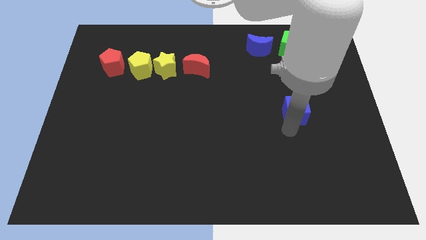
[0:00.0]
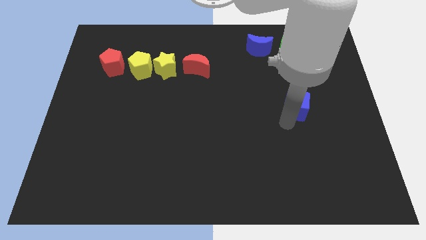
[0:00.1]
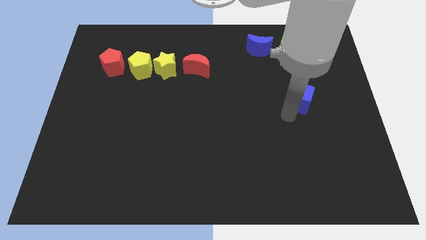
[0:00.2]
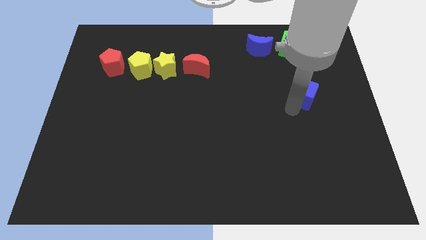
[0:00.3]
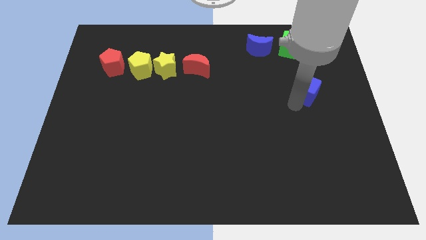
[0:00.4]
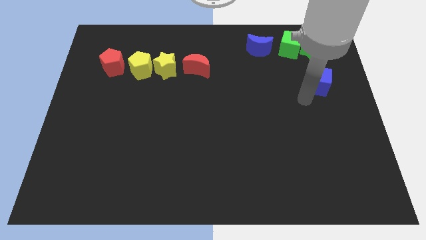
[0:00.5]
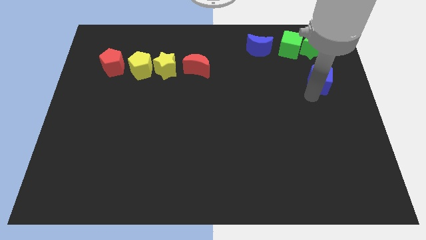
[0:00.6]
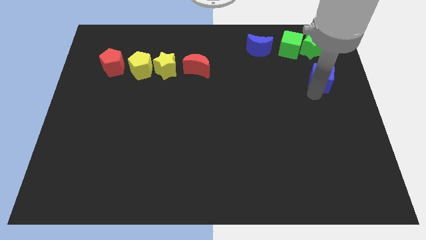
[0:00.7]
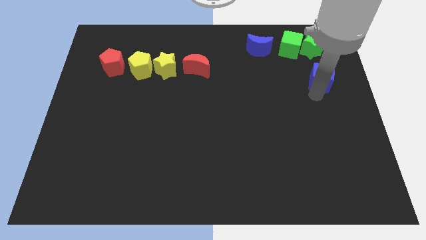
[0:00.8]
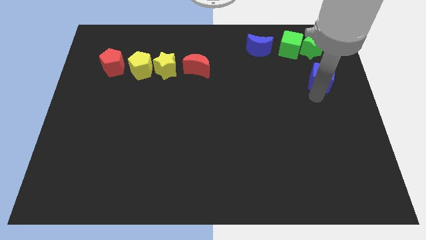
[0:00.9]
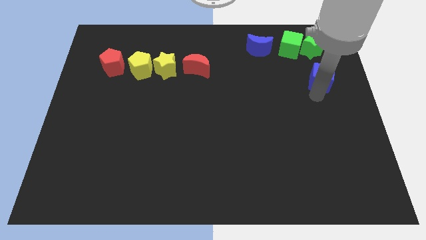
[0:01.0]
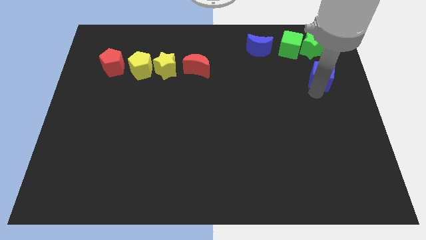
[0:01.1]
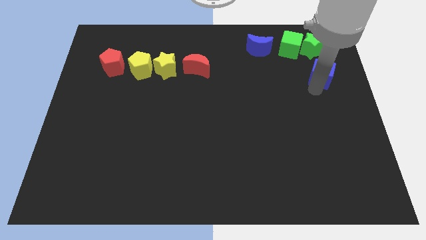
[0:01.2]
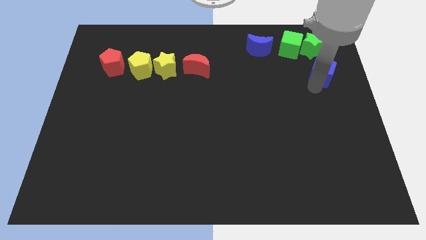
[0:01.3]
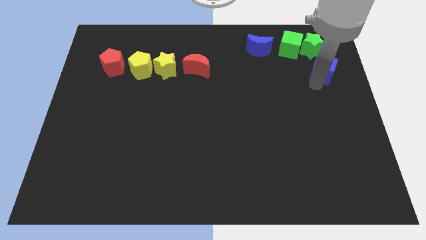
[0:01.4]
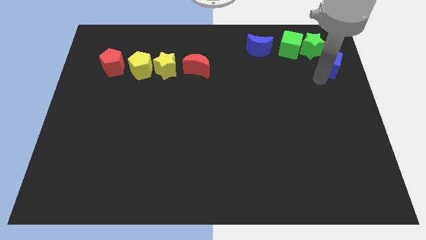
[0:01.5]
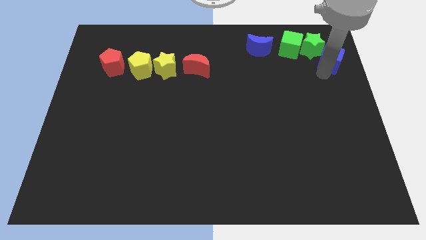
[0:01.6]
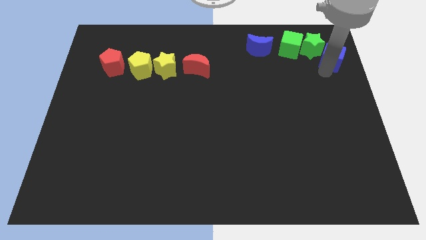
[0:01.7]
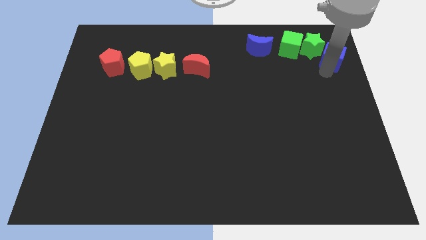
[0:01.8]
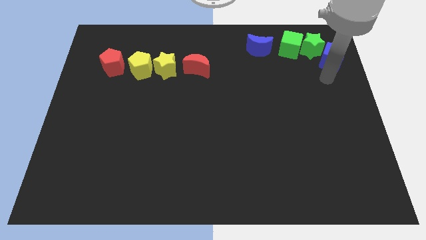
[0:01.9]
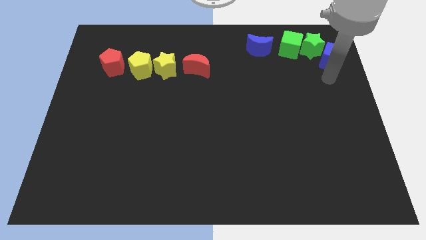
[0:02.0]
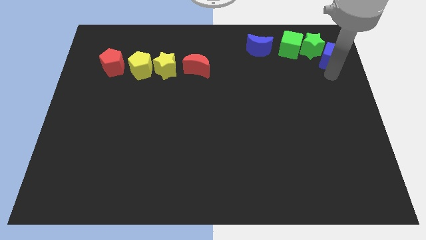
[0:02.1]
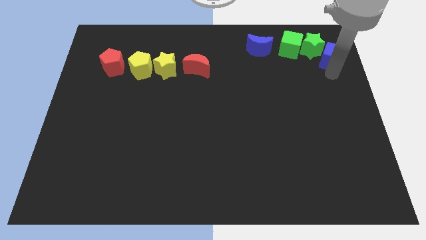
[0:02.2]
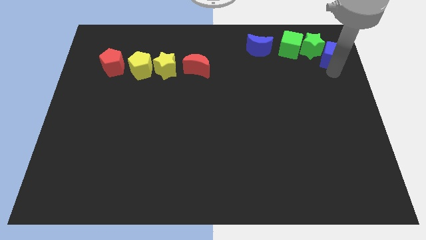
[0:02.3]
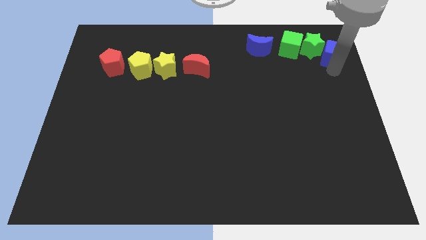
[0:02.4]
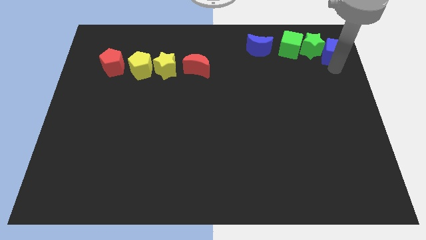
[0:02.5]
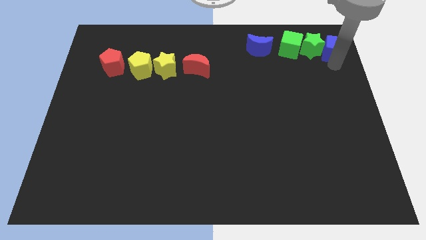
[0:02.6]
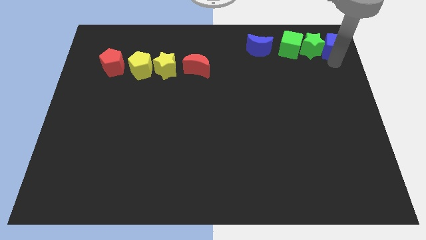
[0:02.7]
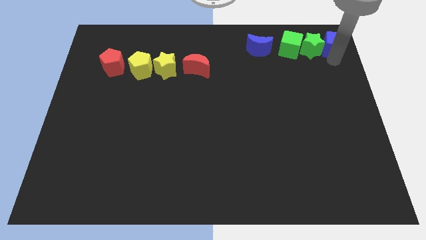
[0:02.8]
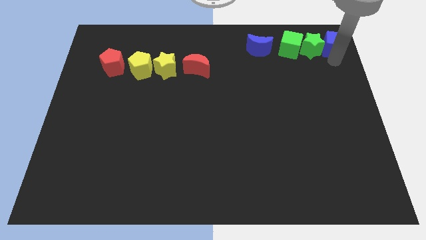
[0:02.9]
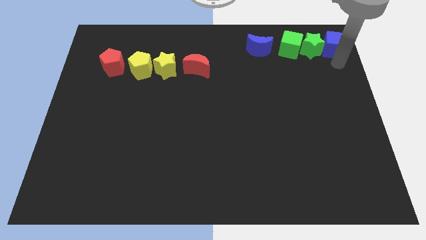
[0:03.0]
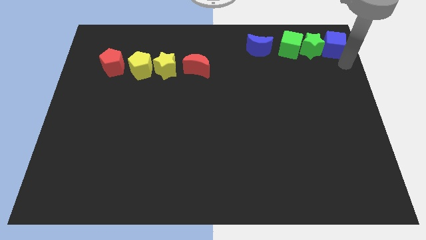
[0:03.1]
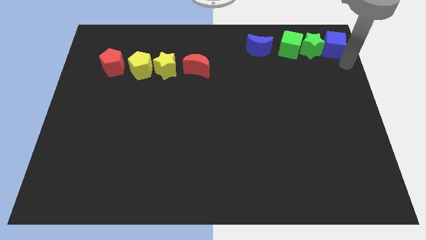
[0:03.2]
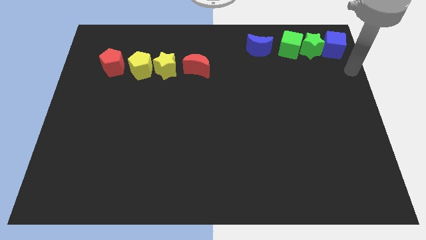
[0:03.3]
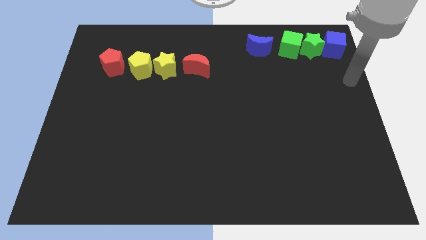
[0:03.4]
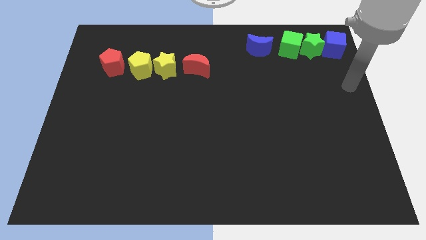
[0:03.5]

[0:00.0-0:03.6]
place the blue cube to the right of the green star

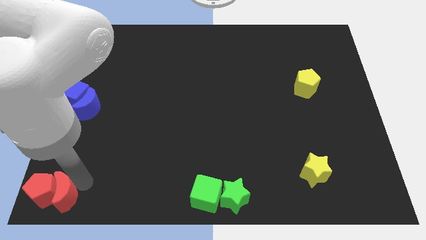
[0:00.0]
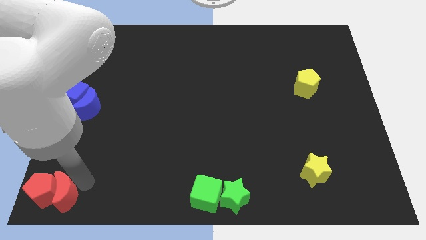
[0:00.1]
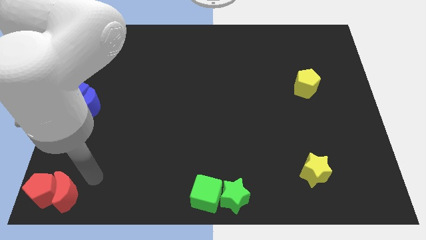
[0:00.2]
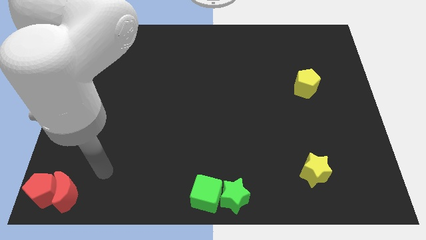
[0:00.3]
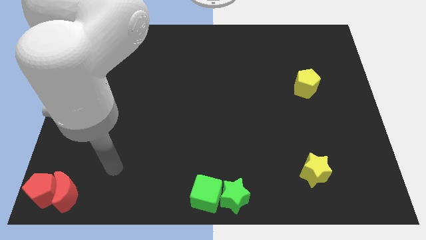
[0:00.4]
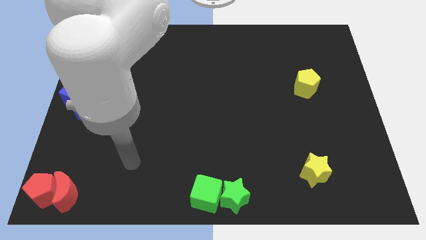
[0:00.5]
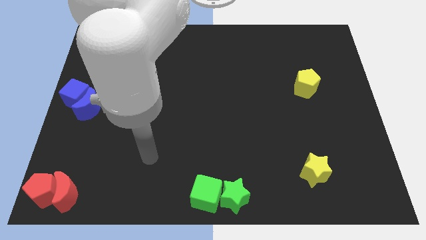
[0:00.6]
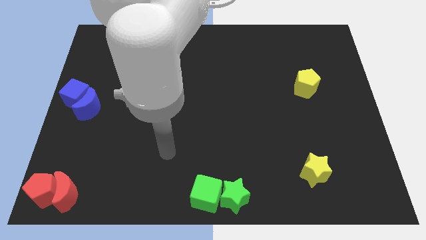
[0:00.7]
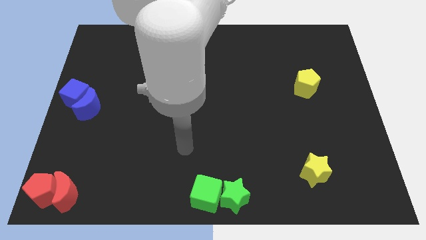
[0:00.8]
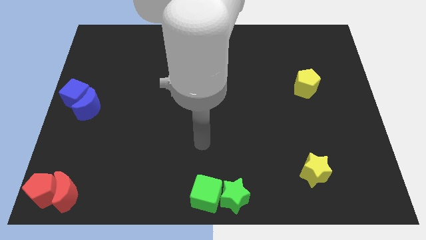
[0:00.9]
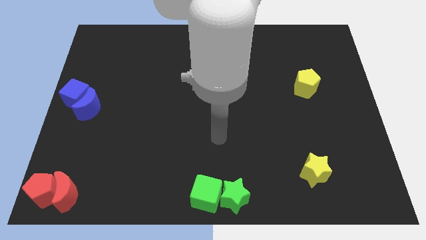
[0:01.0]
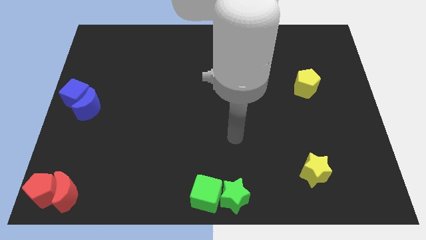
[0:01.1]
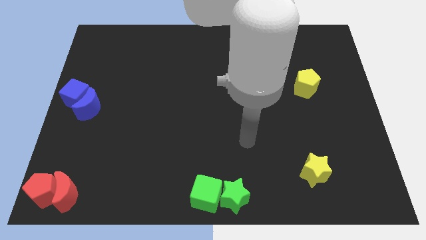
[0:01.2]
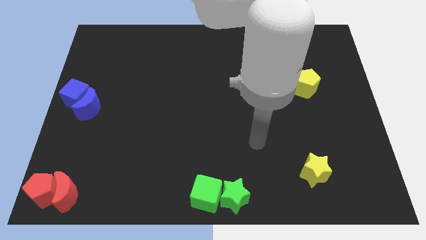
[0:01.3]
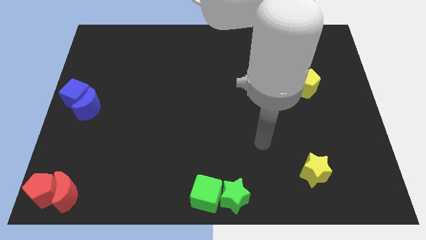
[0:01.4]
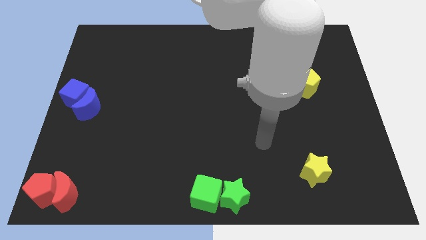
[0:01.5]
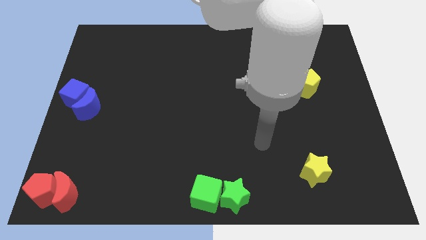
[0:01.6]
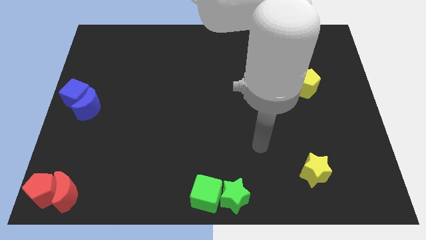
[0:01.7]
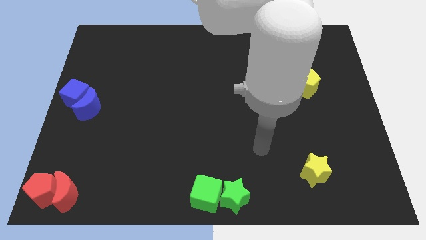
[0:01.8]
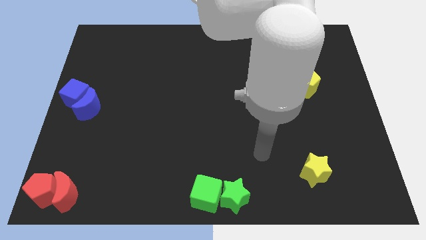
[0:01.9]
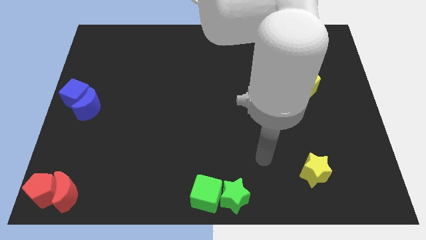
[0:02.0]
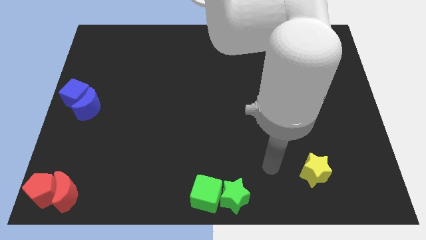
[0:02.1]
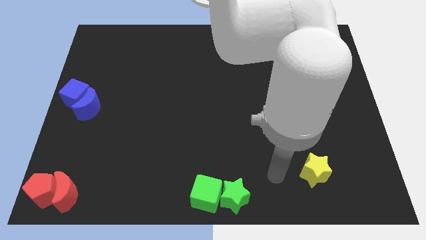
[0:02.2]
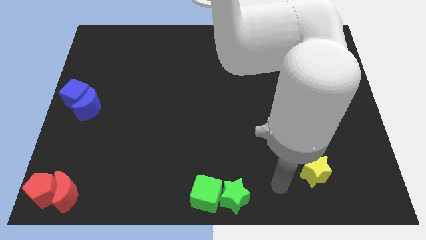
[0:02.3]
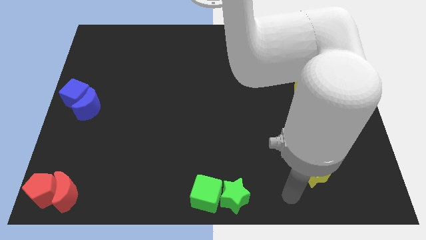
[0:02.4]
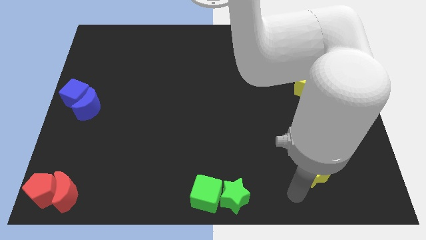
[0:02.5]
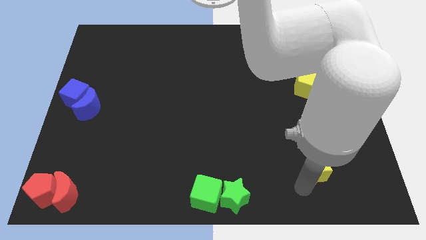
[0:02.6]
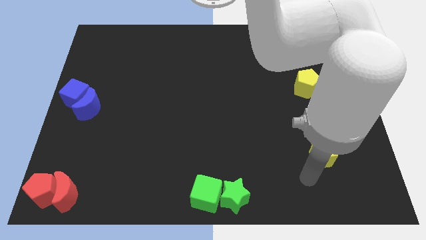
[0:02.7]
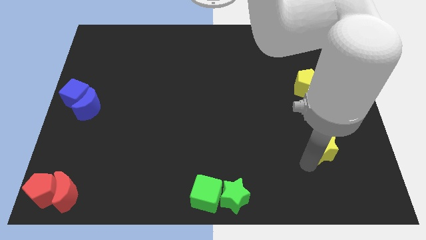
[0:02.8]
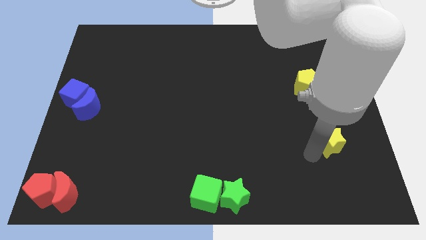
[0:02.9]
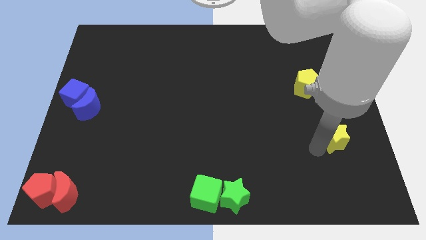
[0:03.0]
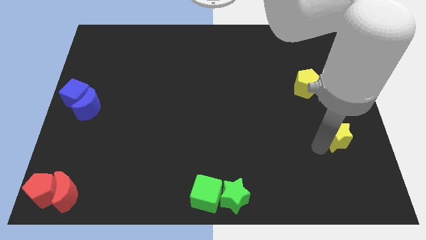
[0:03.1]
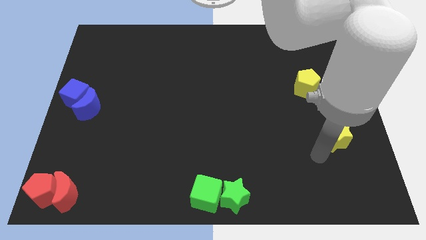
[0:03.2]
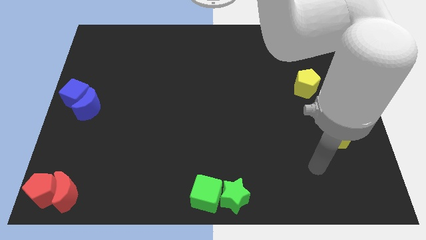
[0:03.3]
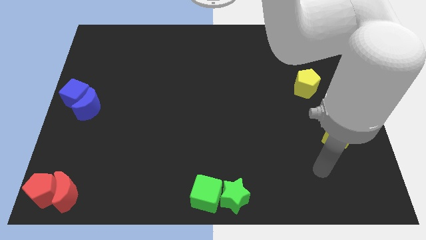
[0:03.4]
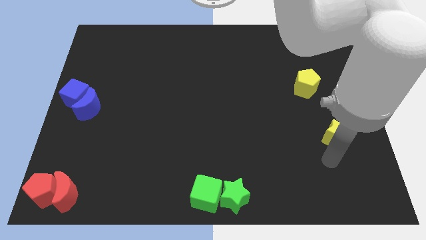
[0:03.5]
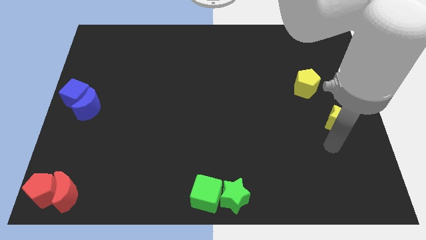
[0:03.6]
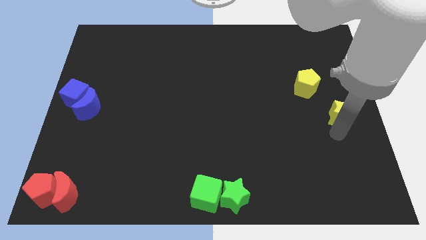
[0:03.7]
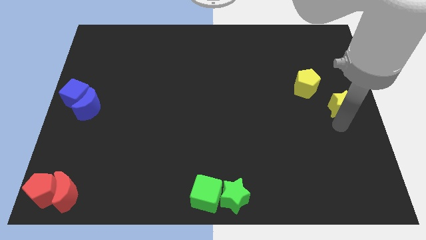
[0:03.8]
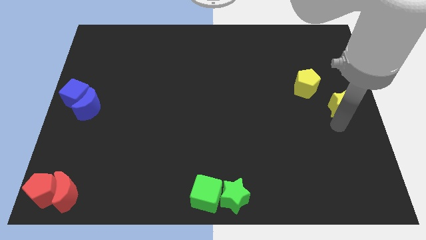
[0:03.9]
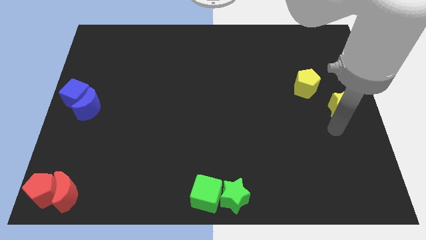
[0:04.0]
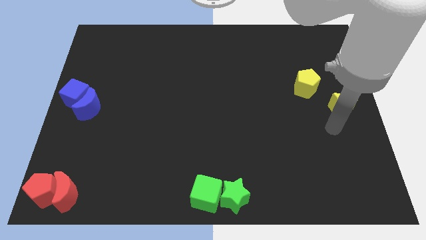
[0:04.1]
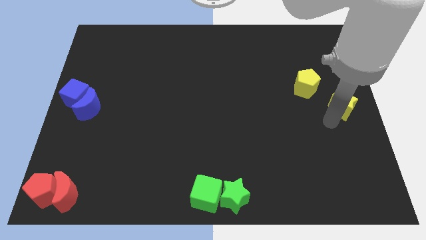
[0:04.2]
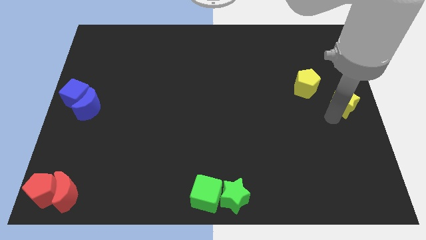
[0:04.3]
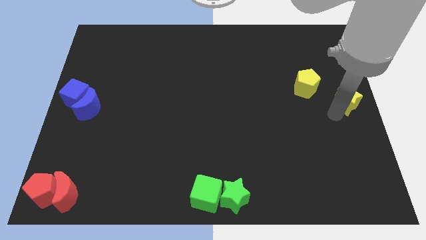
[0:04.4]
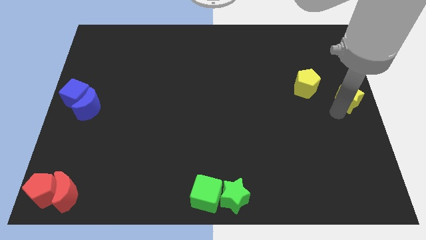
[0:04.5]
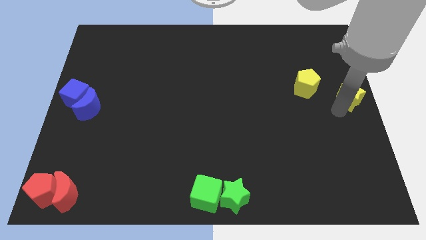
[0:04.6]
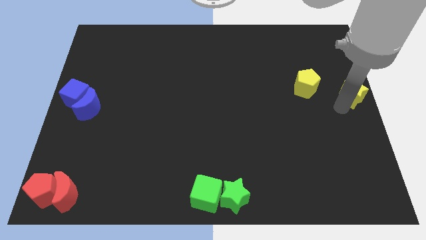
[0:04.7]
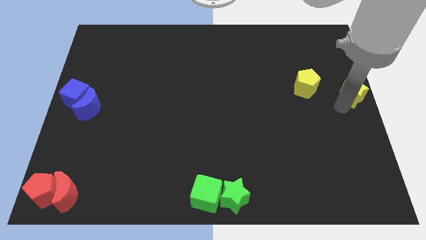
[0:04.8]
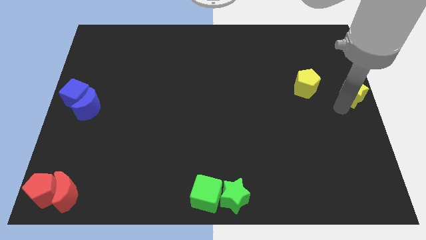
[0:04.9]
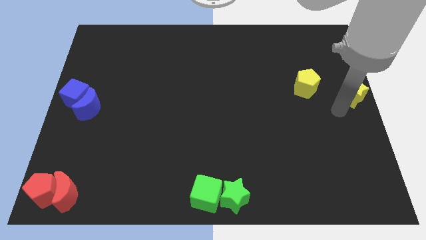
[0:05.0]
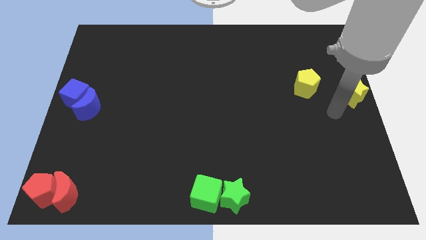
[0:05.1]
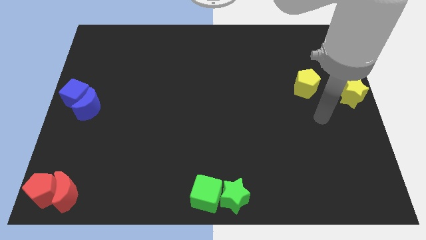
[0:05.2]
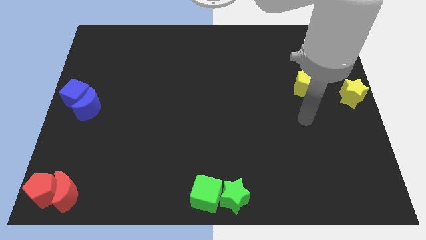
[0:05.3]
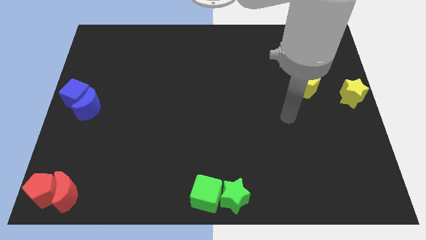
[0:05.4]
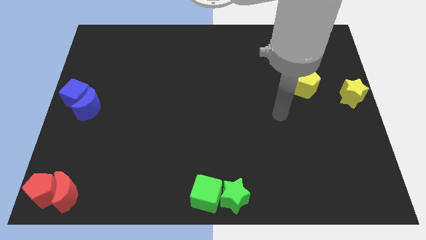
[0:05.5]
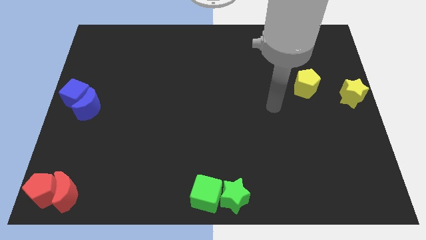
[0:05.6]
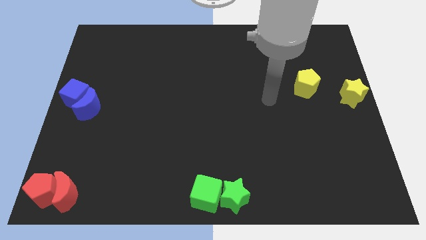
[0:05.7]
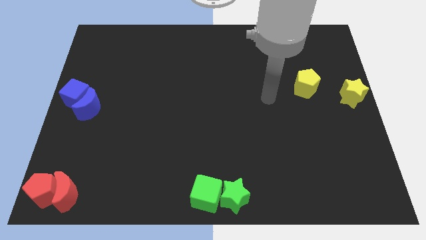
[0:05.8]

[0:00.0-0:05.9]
move the yellow star yellow pentagon towards the right center
